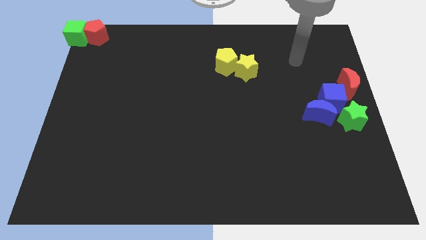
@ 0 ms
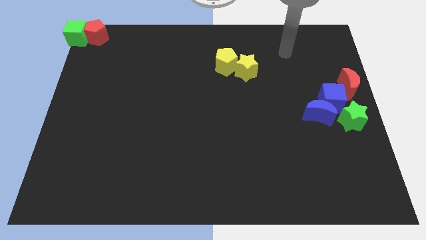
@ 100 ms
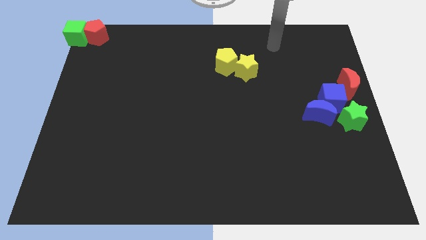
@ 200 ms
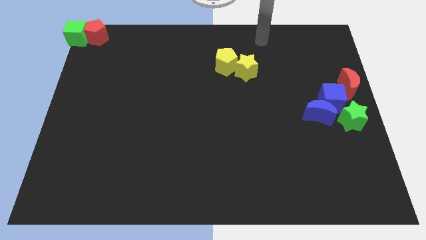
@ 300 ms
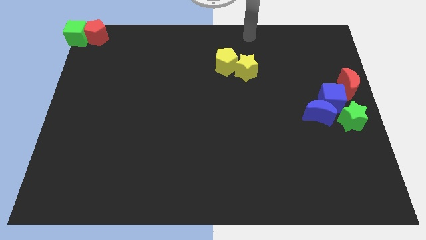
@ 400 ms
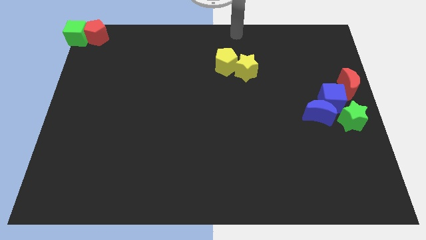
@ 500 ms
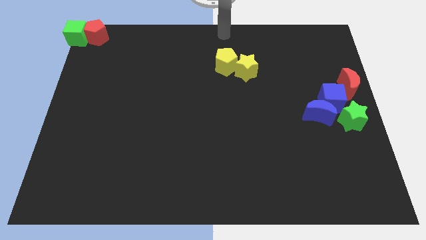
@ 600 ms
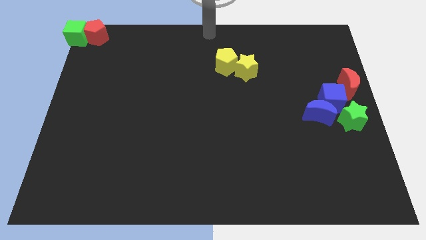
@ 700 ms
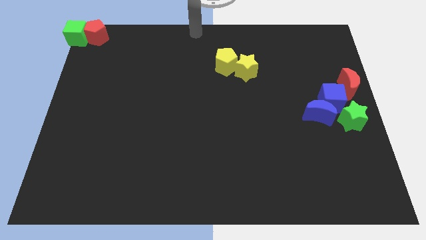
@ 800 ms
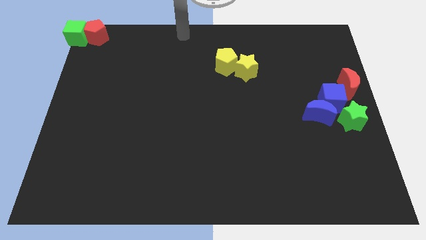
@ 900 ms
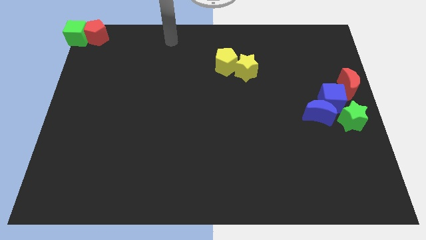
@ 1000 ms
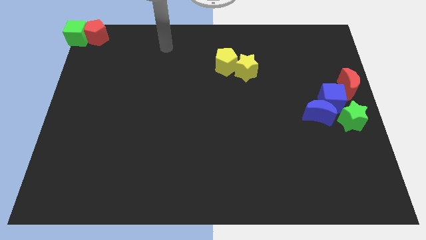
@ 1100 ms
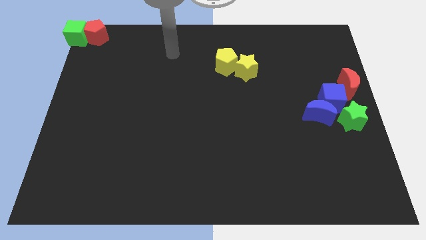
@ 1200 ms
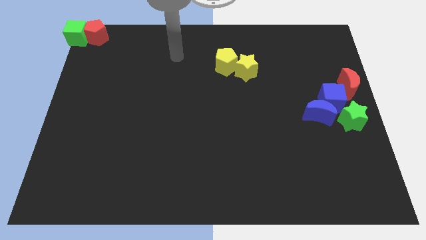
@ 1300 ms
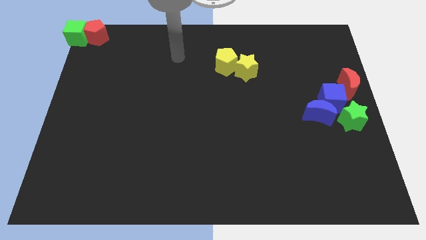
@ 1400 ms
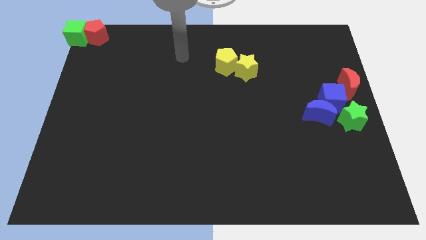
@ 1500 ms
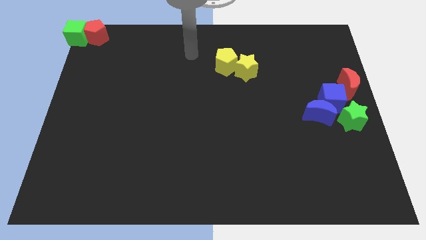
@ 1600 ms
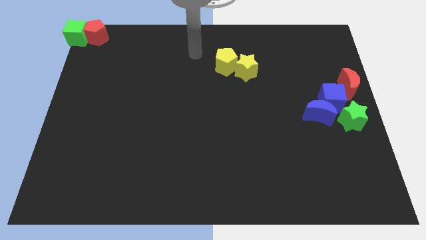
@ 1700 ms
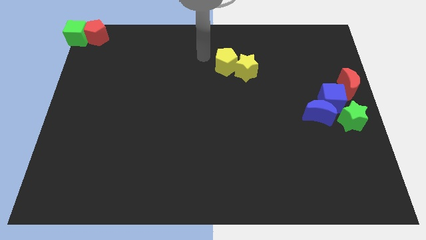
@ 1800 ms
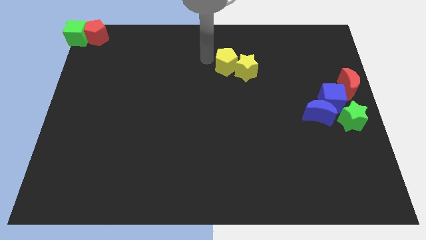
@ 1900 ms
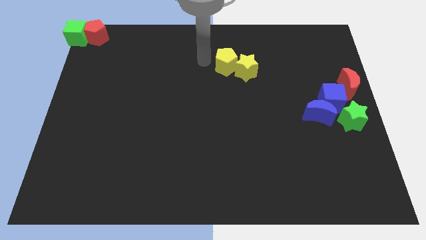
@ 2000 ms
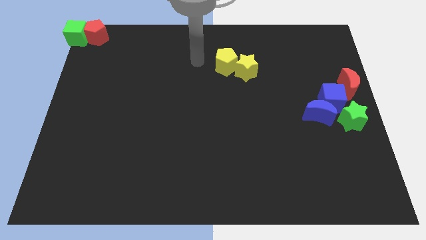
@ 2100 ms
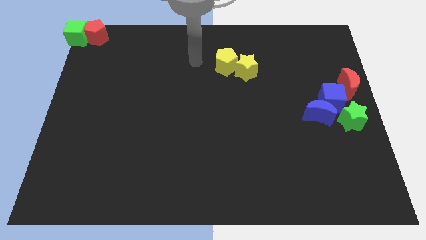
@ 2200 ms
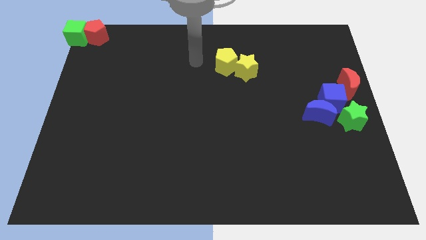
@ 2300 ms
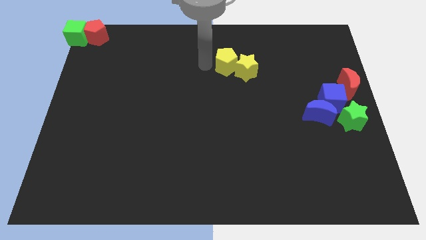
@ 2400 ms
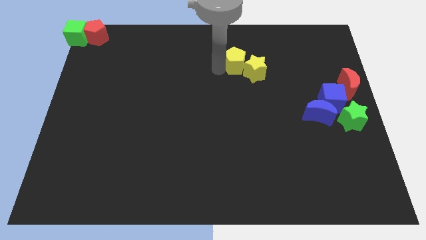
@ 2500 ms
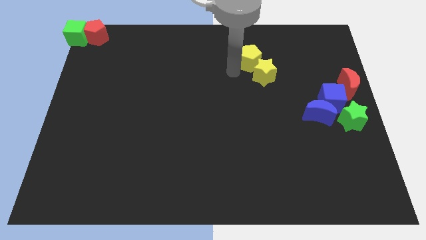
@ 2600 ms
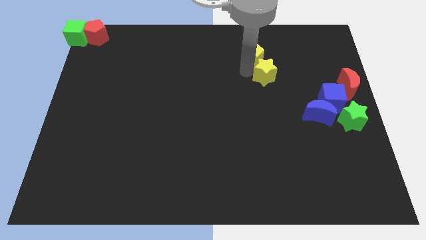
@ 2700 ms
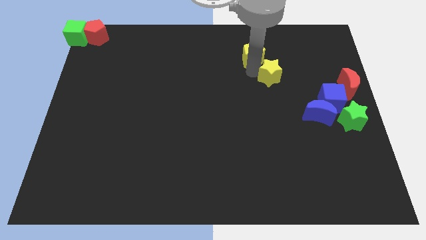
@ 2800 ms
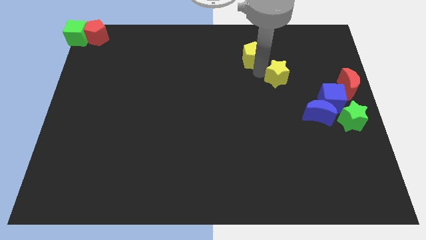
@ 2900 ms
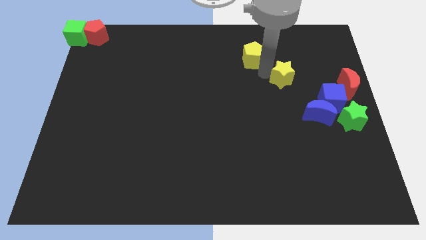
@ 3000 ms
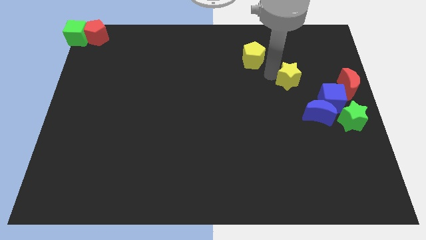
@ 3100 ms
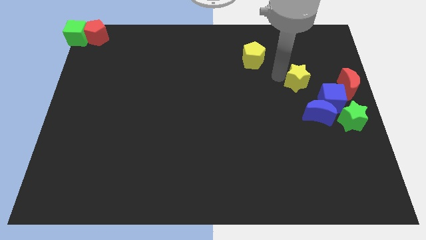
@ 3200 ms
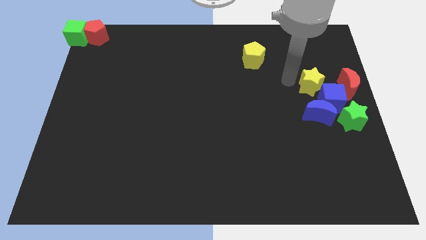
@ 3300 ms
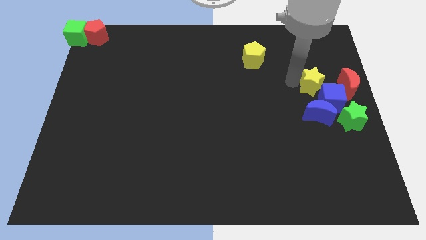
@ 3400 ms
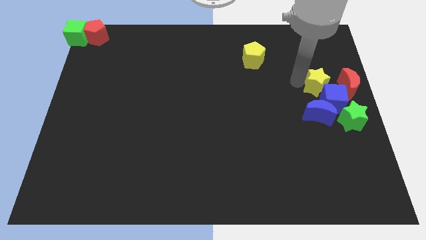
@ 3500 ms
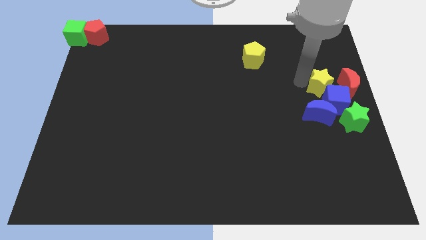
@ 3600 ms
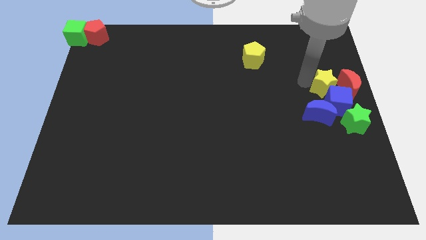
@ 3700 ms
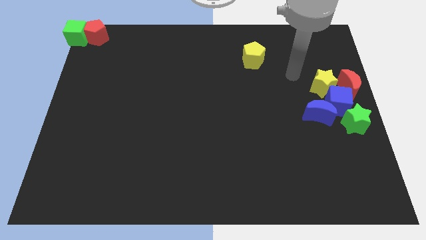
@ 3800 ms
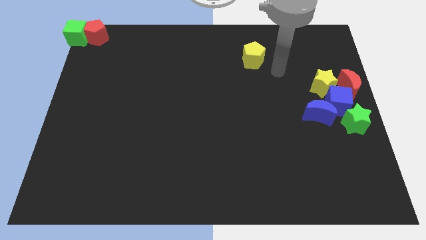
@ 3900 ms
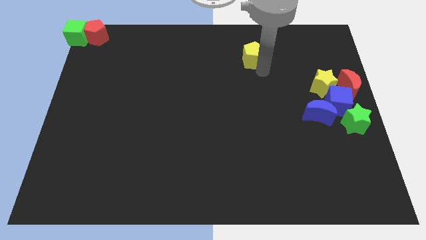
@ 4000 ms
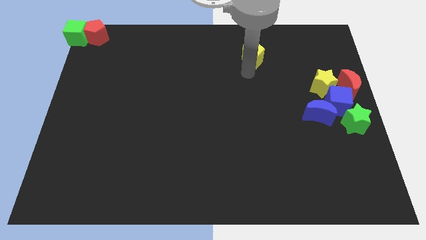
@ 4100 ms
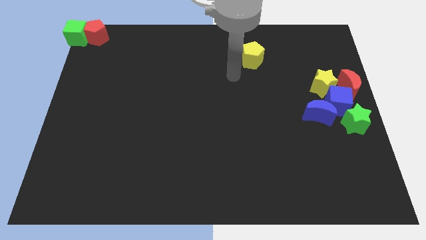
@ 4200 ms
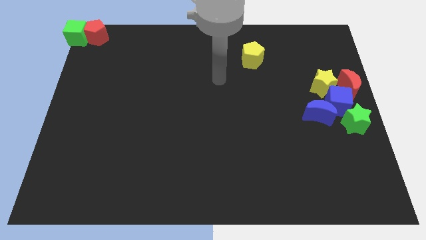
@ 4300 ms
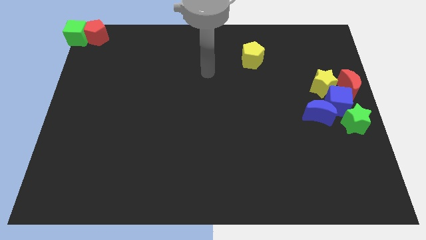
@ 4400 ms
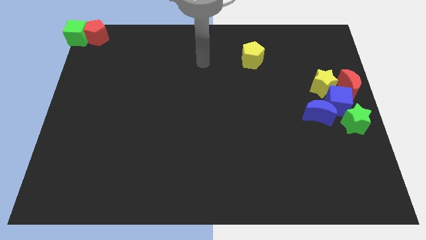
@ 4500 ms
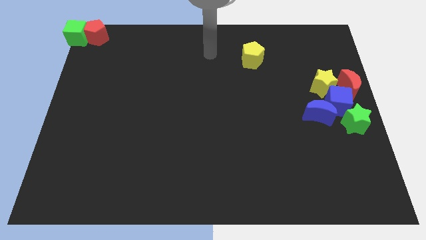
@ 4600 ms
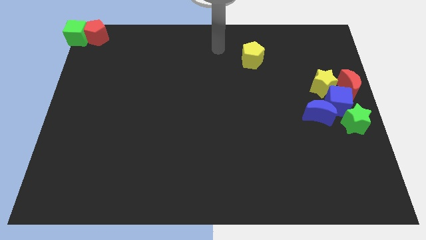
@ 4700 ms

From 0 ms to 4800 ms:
place the yellow star into the top left of the blue cube

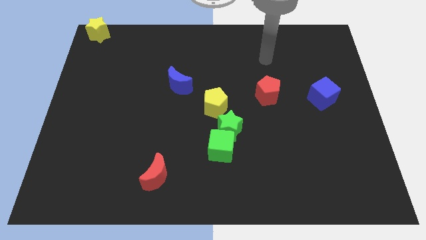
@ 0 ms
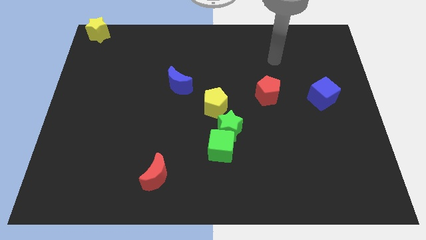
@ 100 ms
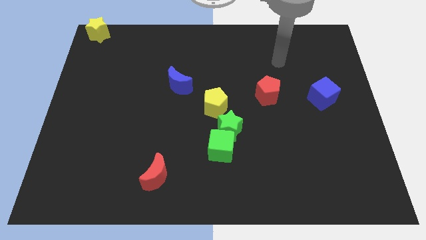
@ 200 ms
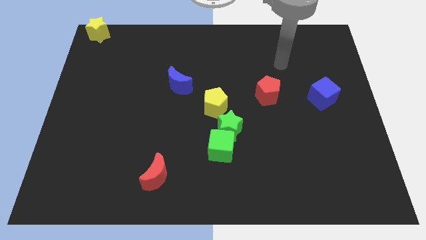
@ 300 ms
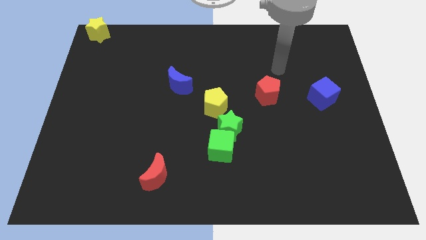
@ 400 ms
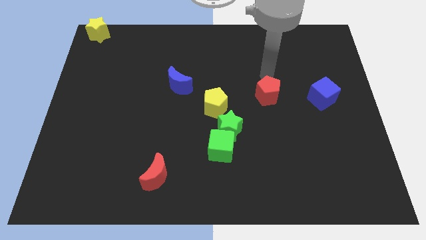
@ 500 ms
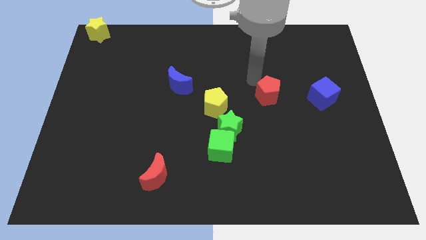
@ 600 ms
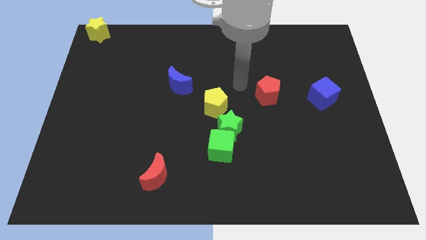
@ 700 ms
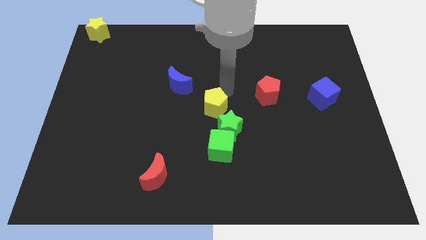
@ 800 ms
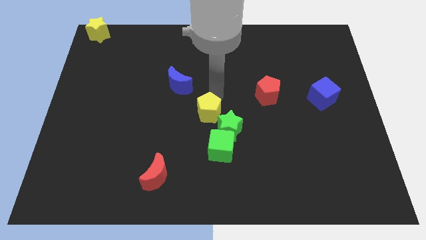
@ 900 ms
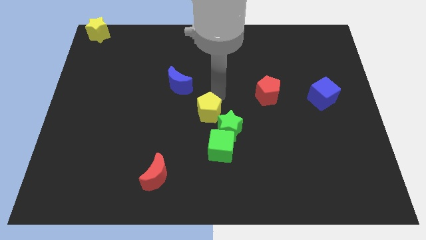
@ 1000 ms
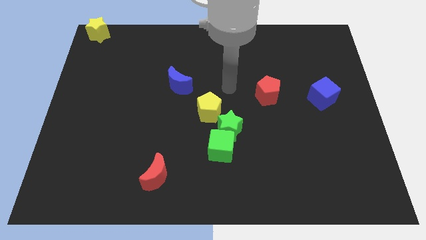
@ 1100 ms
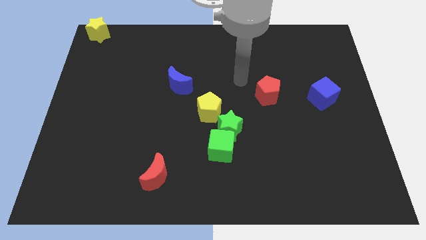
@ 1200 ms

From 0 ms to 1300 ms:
adjust the yellow pentagon between the blue crescent and green star

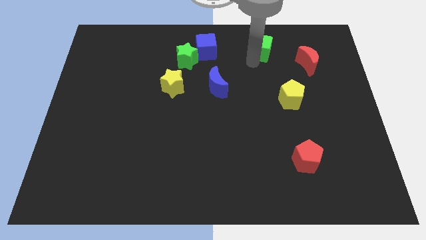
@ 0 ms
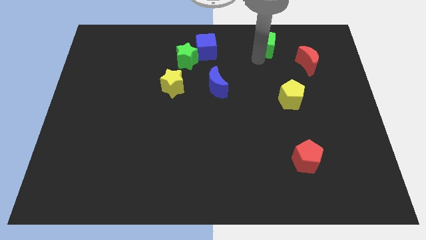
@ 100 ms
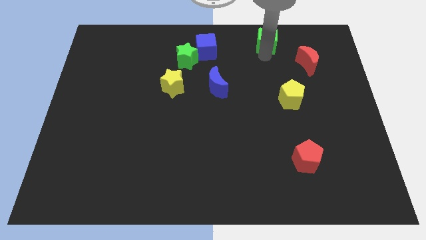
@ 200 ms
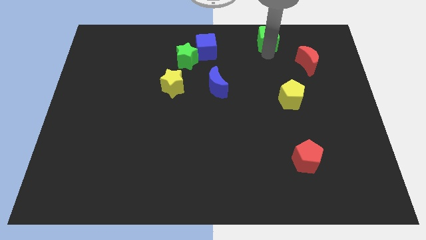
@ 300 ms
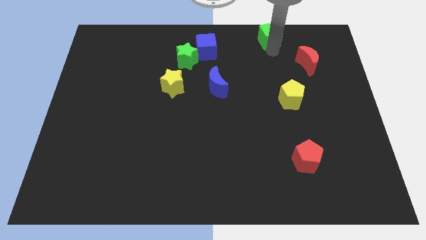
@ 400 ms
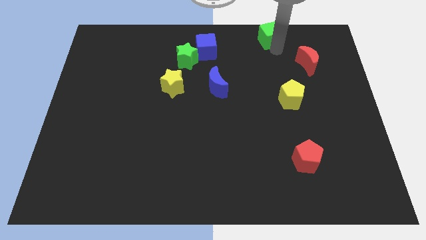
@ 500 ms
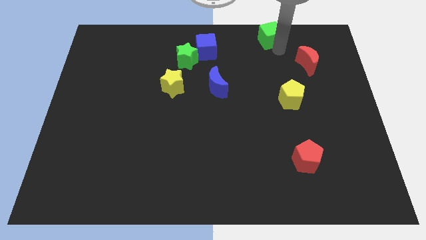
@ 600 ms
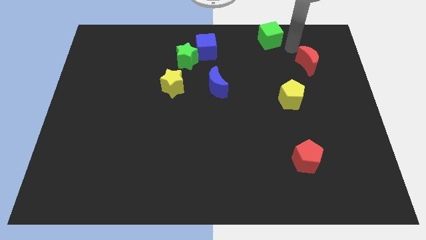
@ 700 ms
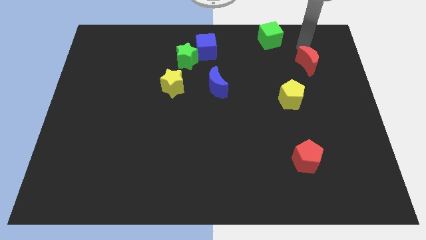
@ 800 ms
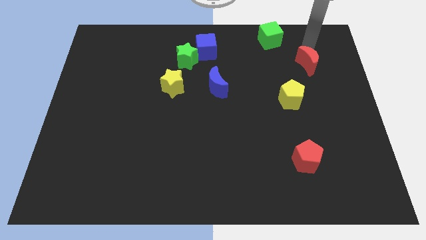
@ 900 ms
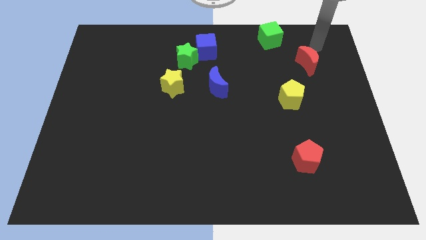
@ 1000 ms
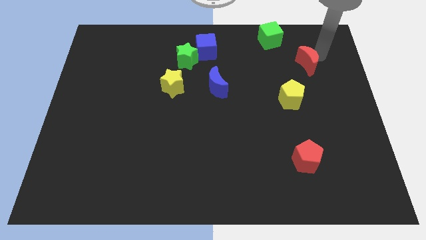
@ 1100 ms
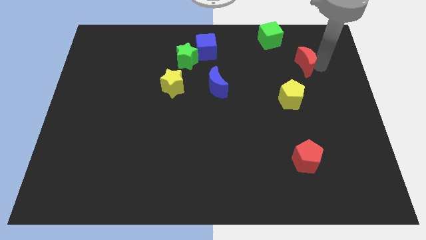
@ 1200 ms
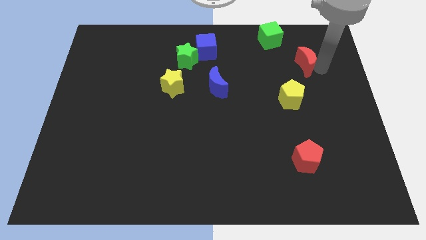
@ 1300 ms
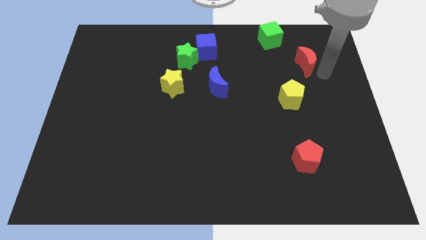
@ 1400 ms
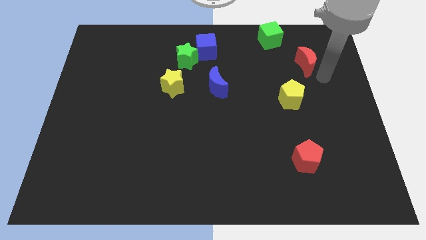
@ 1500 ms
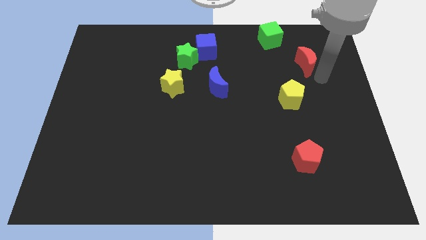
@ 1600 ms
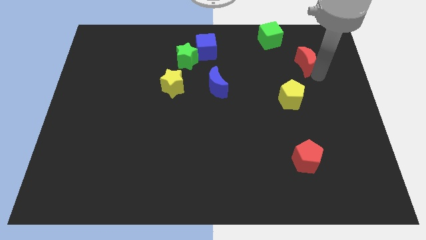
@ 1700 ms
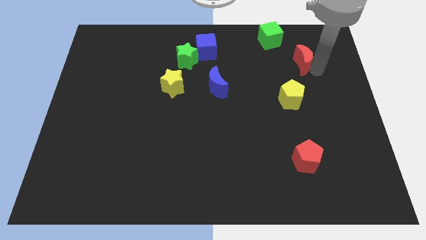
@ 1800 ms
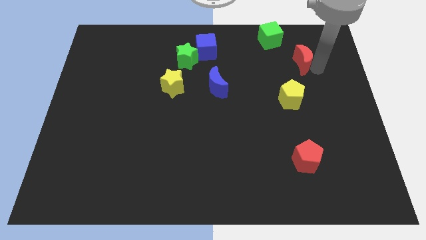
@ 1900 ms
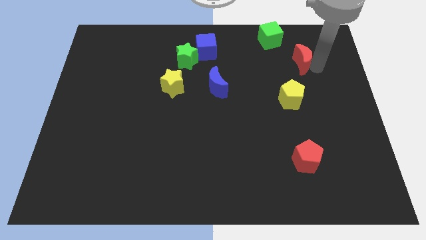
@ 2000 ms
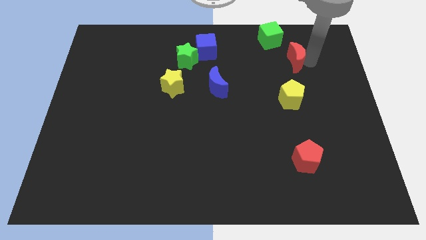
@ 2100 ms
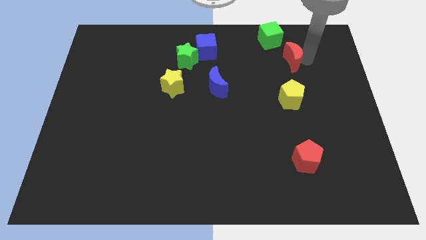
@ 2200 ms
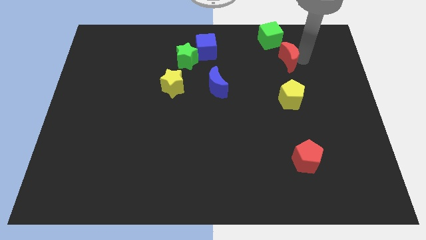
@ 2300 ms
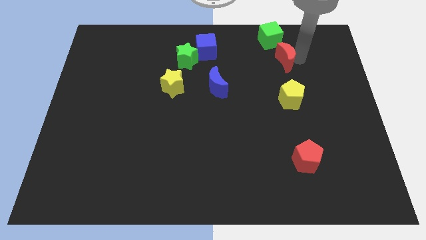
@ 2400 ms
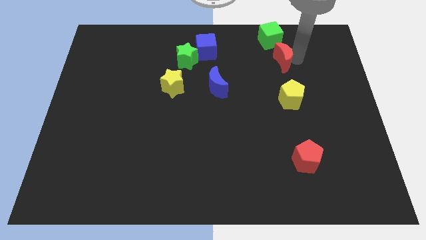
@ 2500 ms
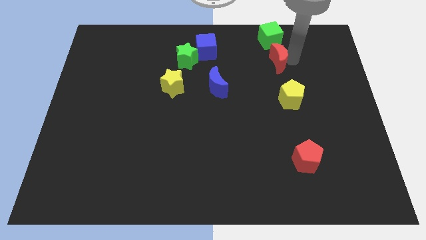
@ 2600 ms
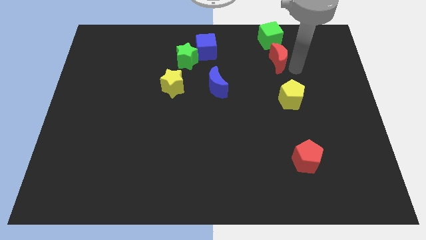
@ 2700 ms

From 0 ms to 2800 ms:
place the red moon down to the green cube
